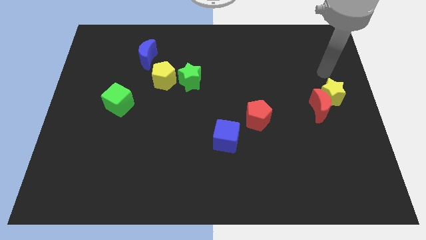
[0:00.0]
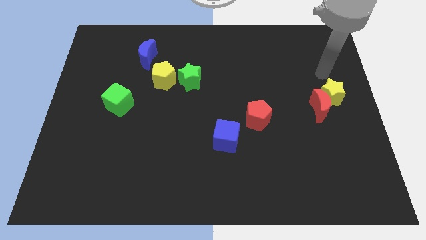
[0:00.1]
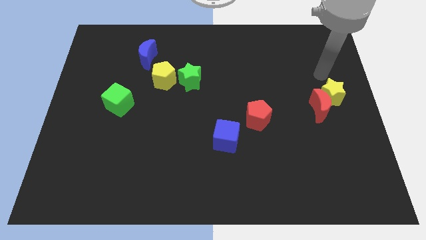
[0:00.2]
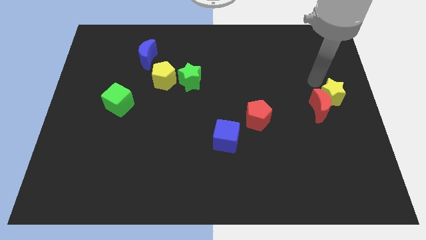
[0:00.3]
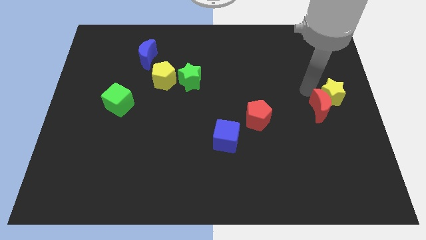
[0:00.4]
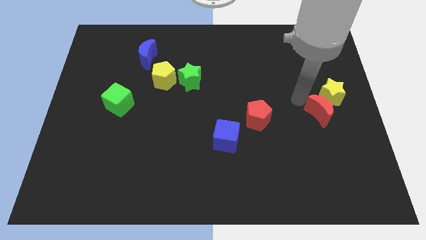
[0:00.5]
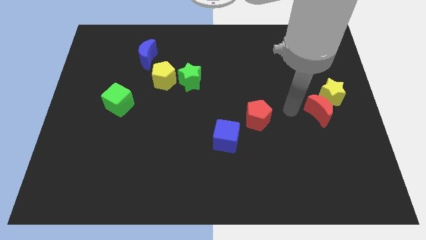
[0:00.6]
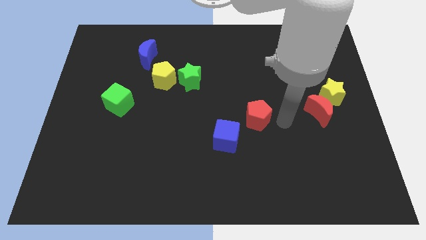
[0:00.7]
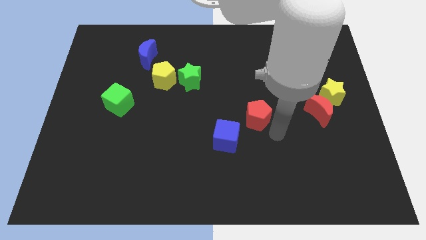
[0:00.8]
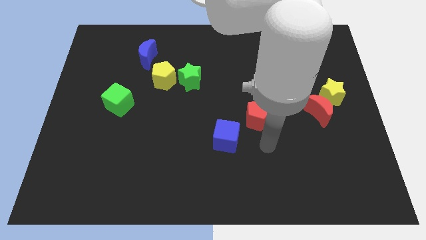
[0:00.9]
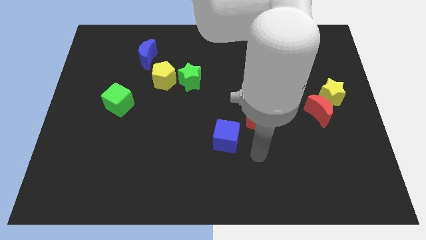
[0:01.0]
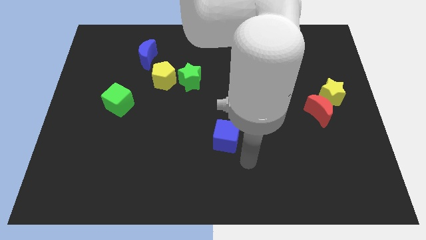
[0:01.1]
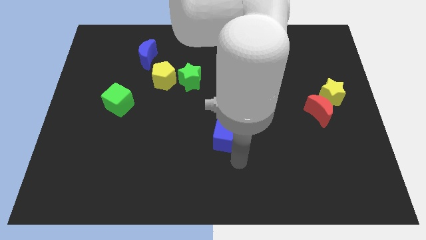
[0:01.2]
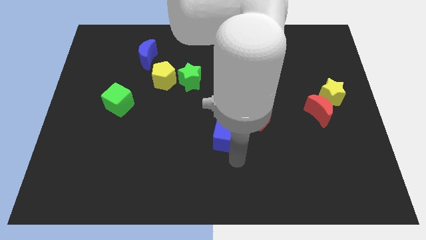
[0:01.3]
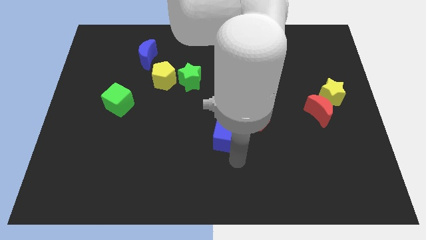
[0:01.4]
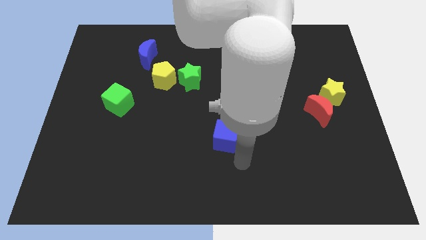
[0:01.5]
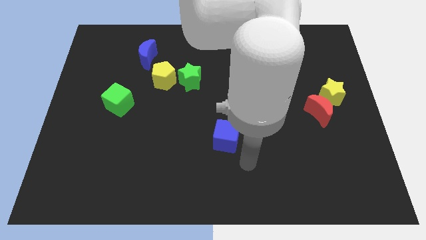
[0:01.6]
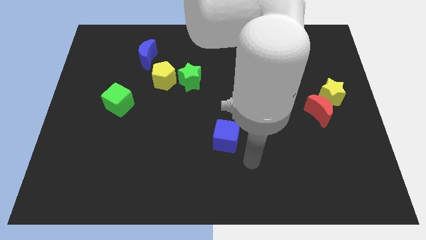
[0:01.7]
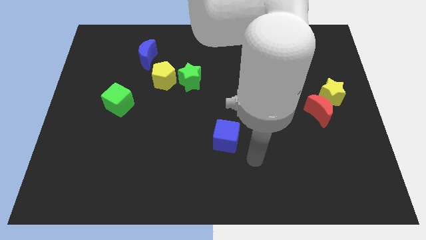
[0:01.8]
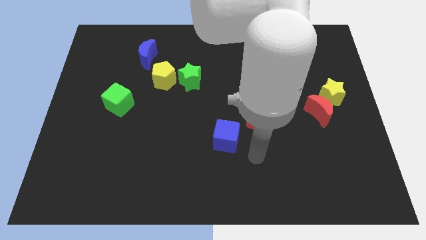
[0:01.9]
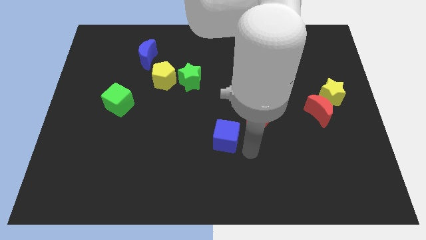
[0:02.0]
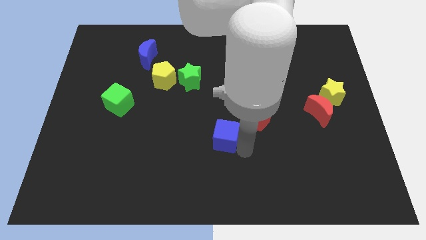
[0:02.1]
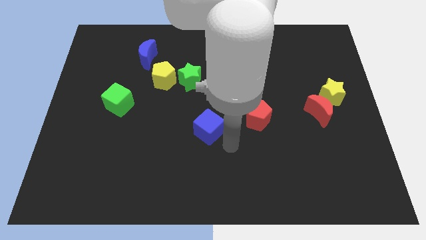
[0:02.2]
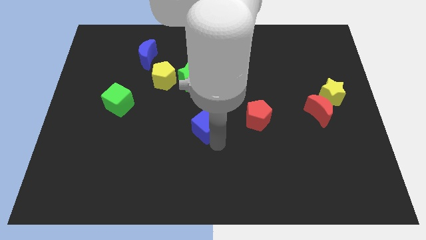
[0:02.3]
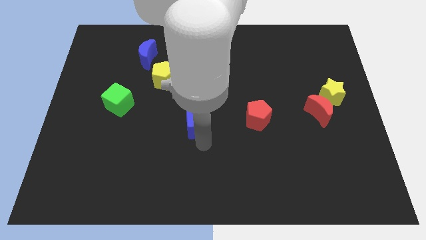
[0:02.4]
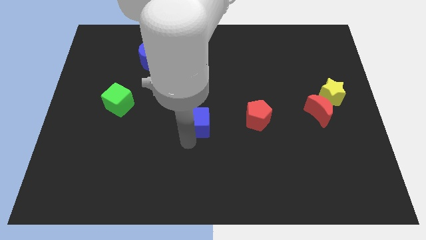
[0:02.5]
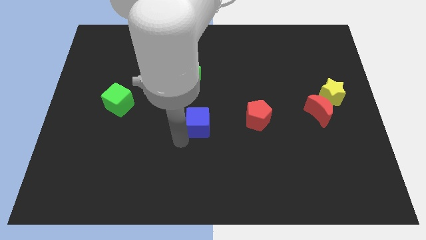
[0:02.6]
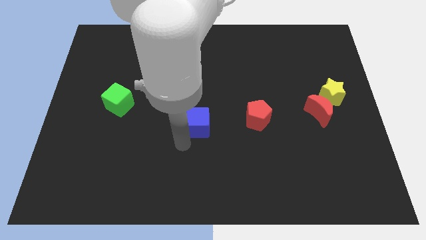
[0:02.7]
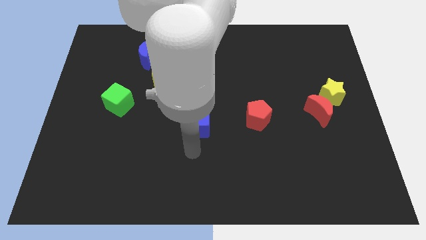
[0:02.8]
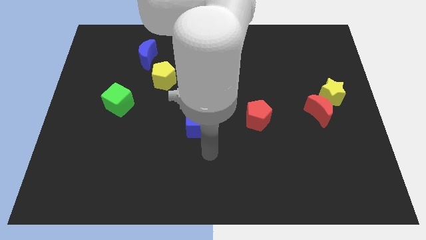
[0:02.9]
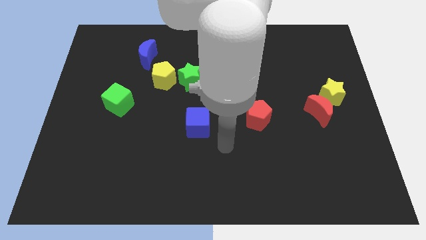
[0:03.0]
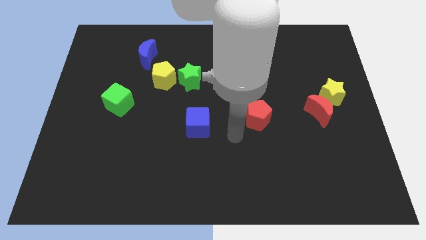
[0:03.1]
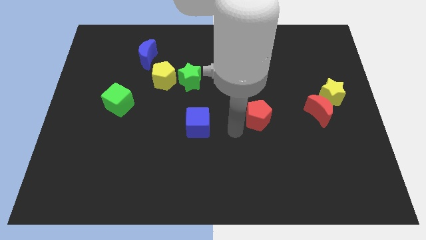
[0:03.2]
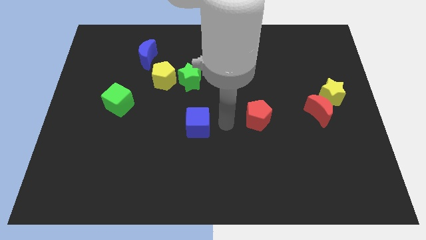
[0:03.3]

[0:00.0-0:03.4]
move the blue cube below green star

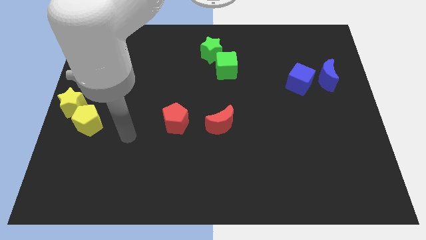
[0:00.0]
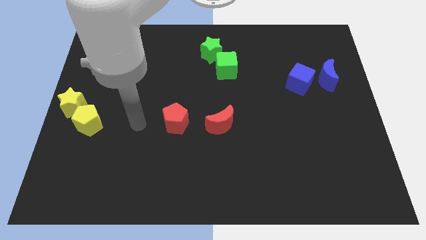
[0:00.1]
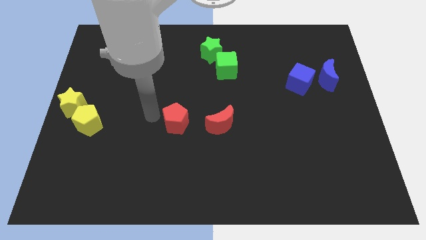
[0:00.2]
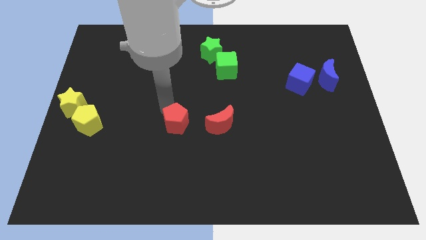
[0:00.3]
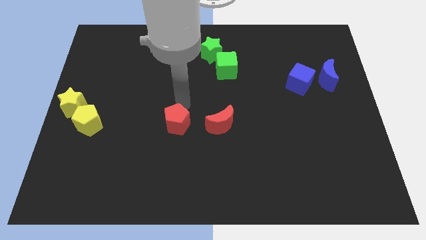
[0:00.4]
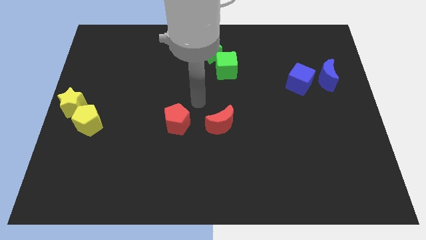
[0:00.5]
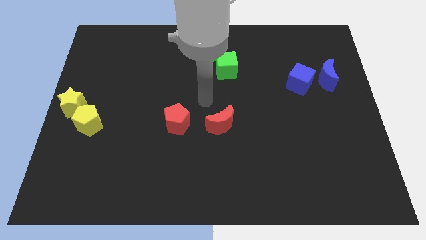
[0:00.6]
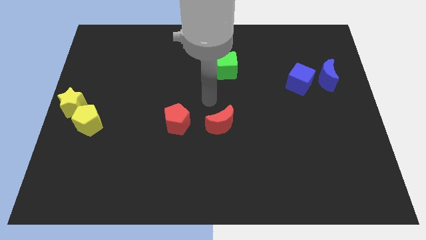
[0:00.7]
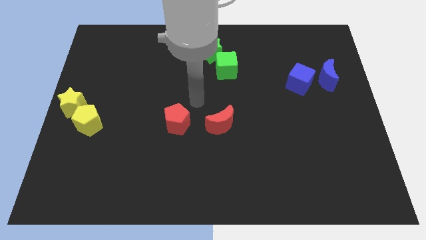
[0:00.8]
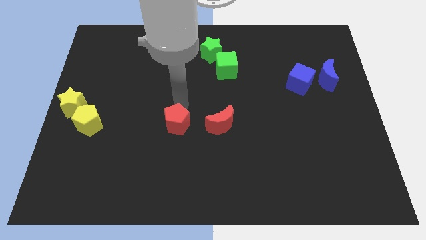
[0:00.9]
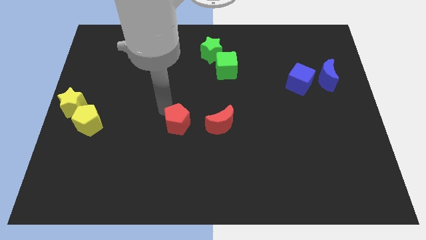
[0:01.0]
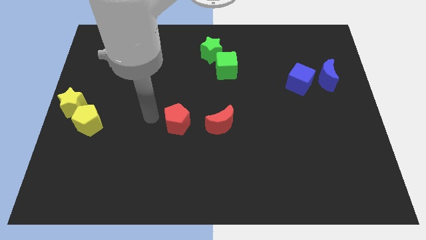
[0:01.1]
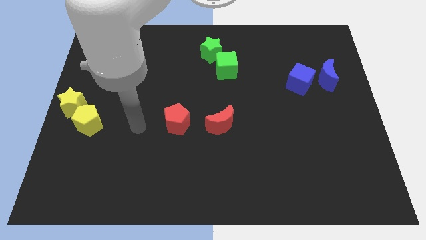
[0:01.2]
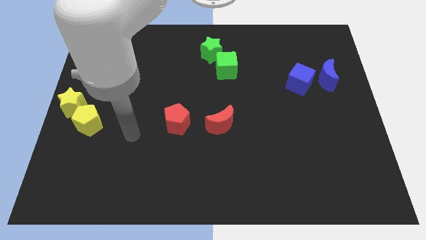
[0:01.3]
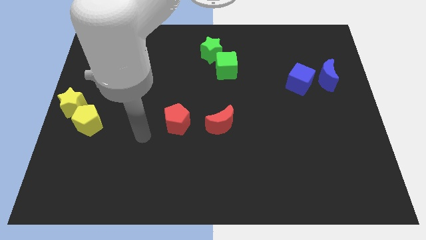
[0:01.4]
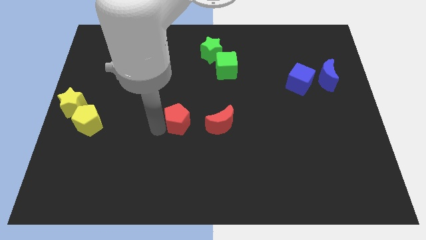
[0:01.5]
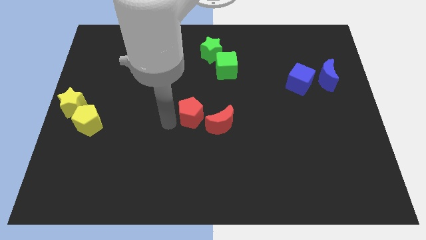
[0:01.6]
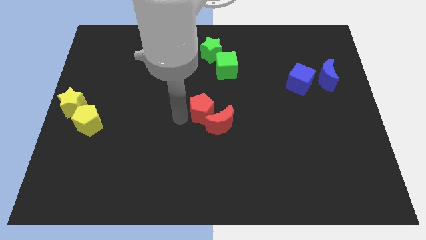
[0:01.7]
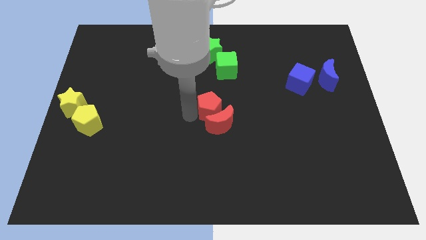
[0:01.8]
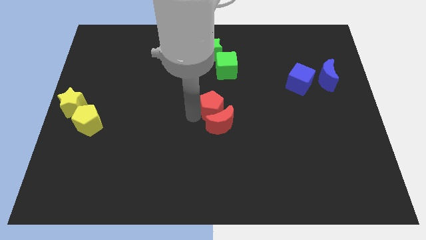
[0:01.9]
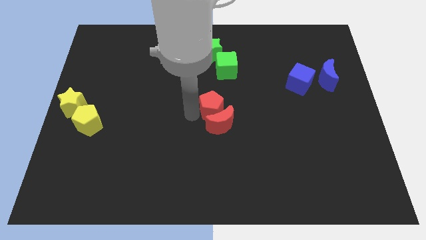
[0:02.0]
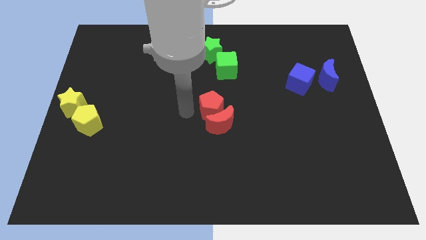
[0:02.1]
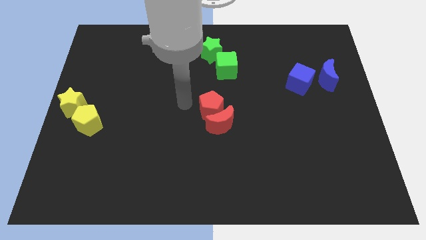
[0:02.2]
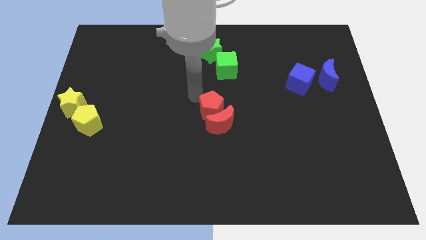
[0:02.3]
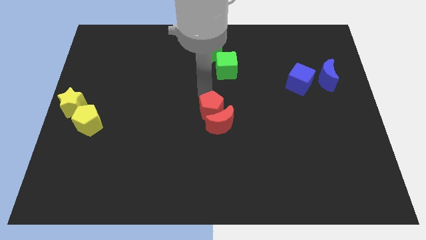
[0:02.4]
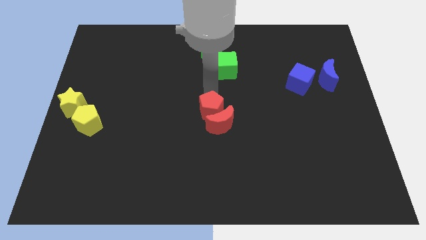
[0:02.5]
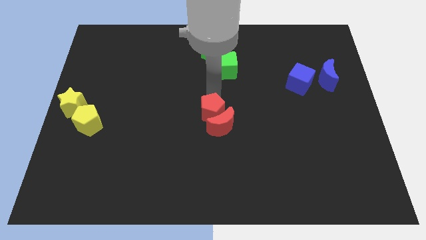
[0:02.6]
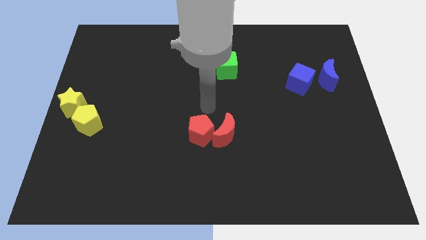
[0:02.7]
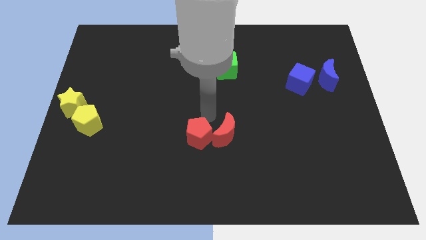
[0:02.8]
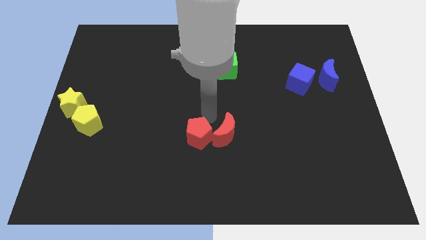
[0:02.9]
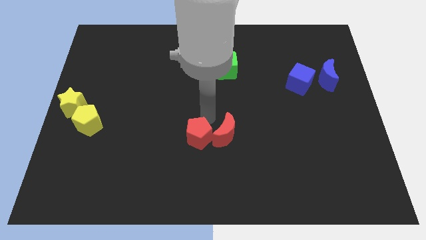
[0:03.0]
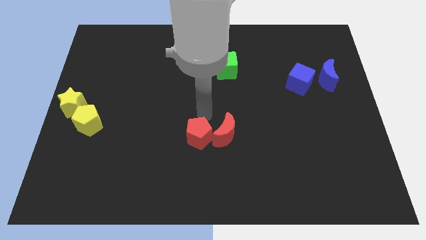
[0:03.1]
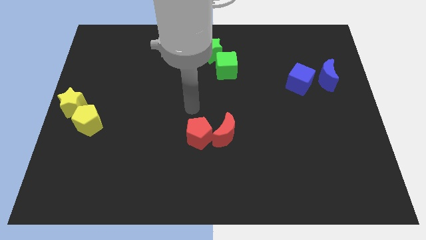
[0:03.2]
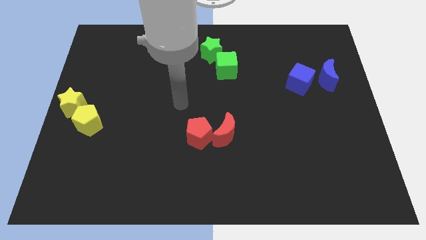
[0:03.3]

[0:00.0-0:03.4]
push the red blocks towards the centre of the board

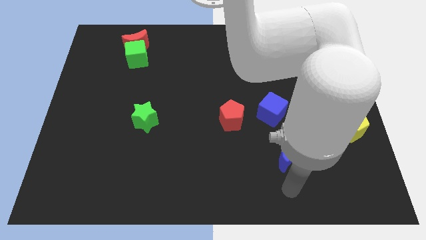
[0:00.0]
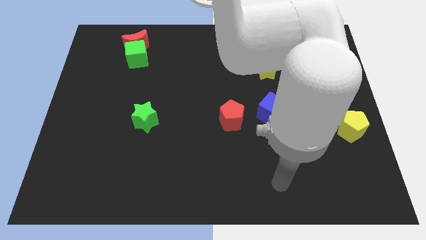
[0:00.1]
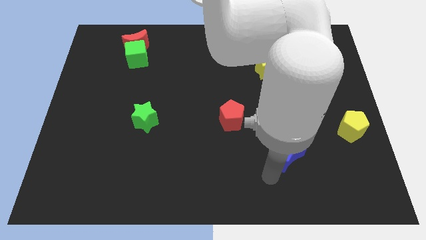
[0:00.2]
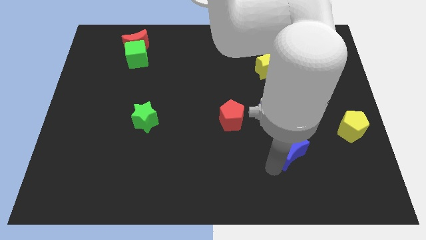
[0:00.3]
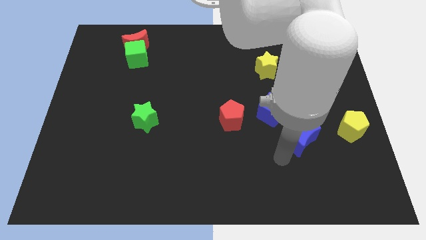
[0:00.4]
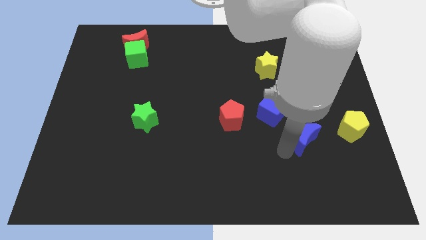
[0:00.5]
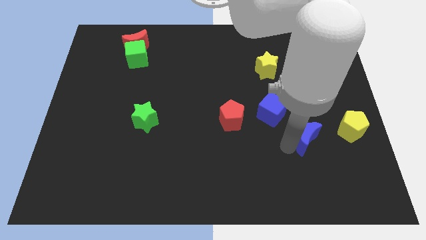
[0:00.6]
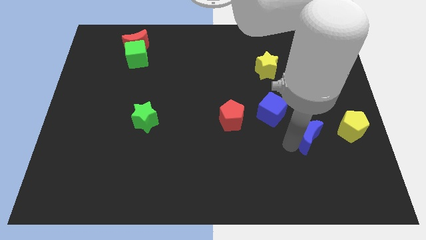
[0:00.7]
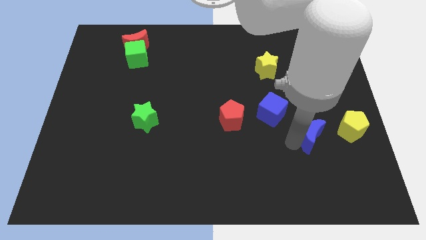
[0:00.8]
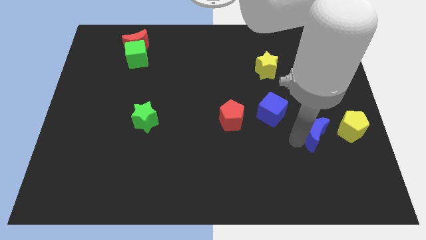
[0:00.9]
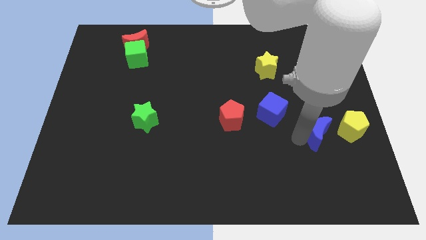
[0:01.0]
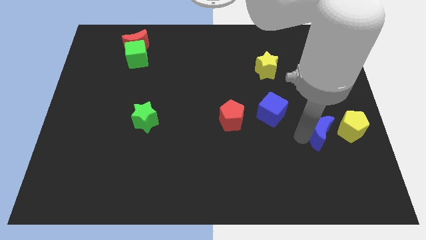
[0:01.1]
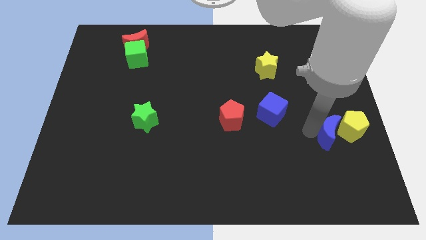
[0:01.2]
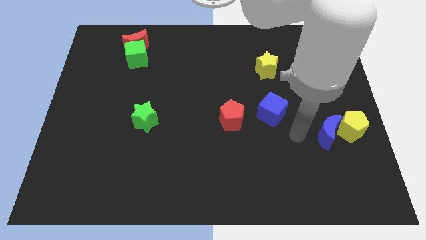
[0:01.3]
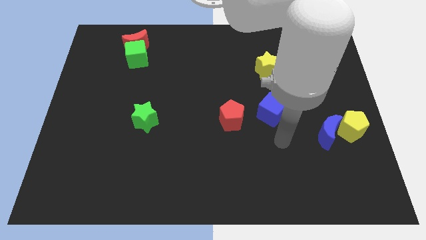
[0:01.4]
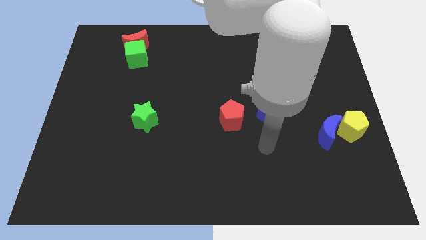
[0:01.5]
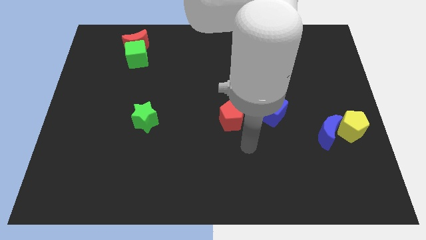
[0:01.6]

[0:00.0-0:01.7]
place the blue moon diagonally bottom right to the blue cube

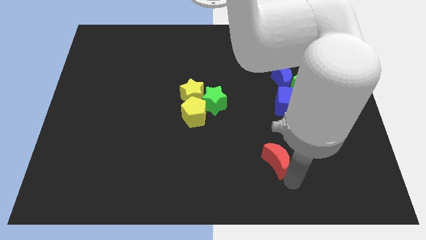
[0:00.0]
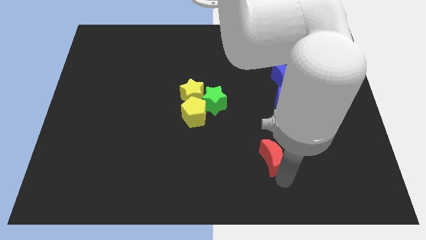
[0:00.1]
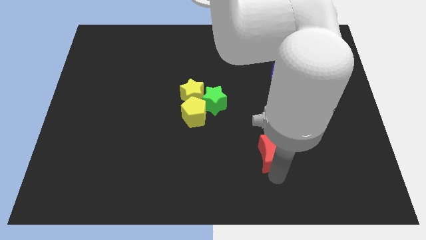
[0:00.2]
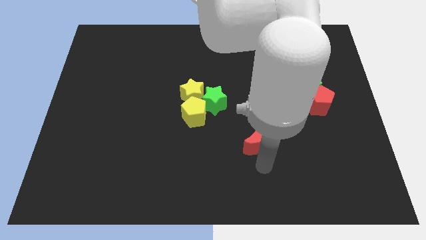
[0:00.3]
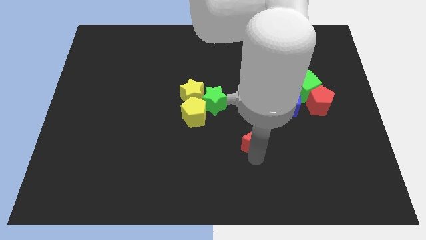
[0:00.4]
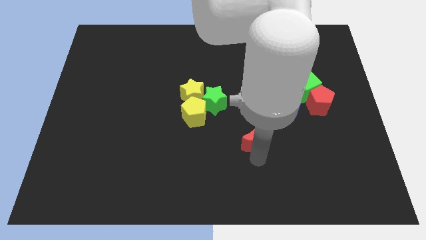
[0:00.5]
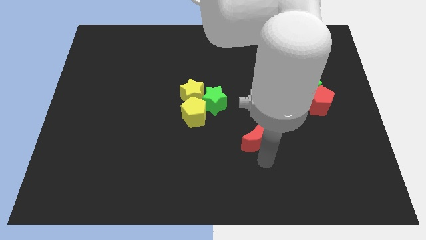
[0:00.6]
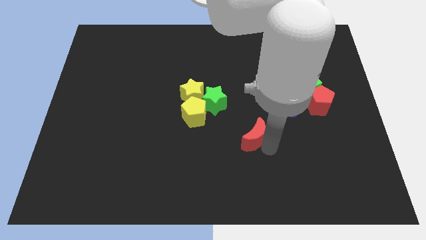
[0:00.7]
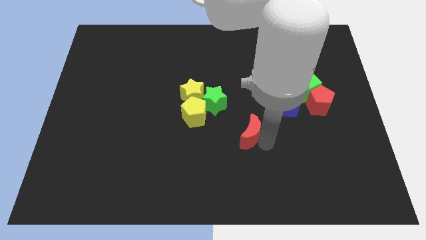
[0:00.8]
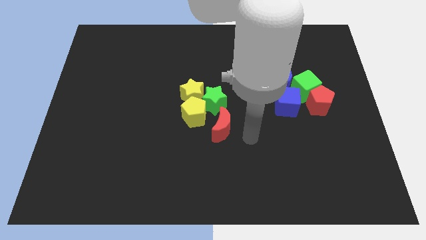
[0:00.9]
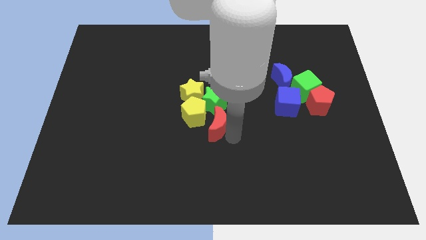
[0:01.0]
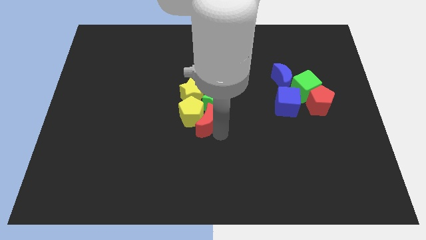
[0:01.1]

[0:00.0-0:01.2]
push the red moon close to the yellow pentagon
